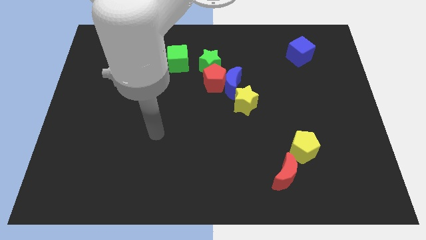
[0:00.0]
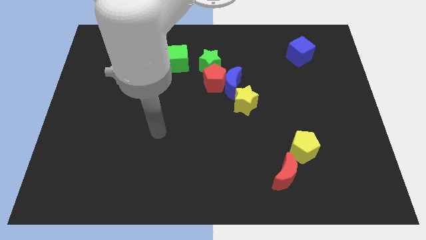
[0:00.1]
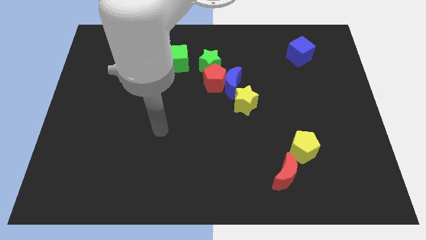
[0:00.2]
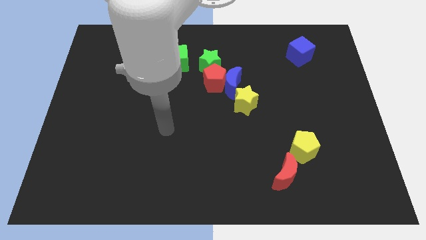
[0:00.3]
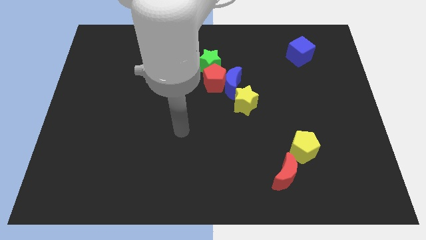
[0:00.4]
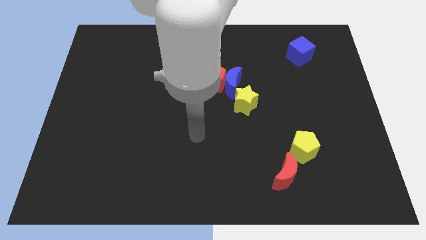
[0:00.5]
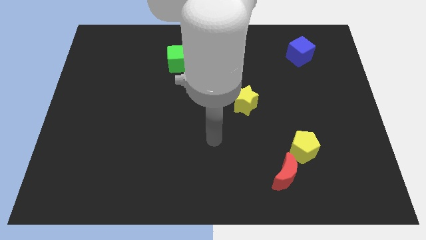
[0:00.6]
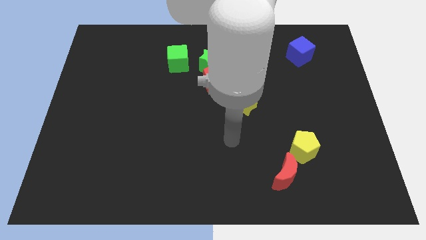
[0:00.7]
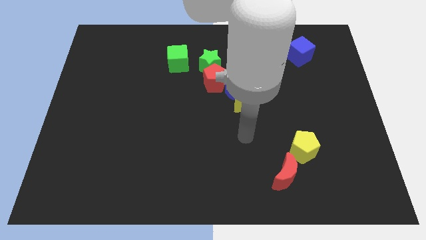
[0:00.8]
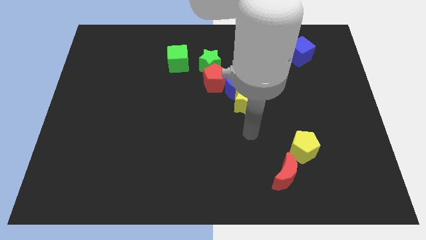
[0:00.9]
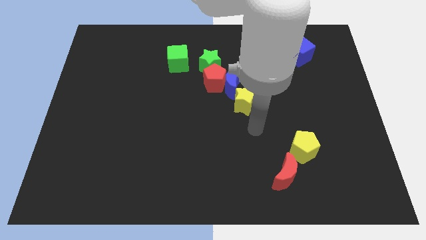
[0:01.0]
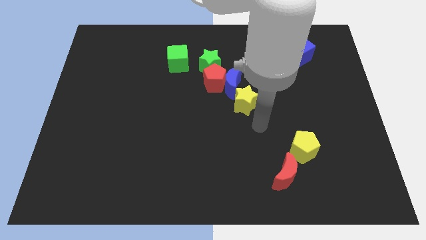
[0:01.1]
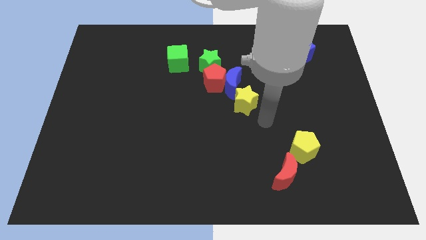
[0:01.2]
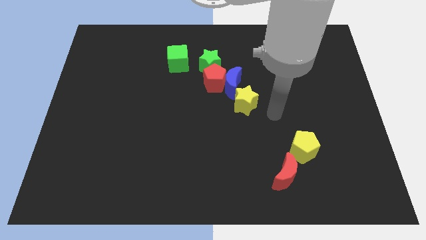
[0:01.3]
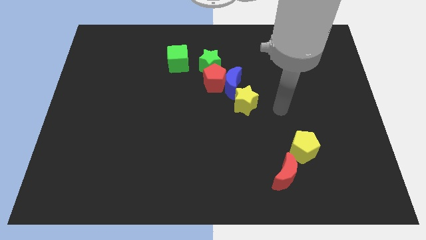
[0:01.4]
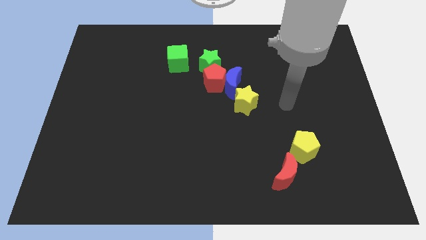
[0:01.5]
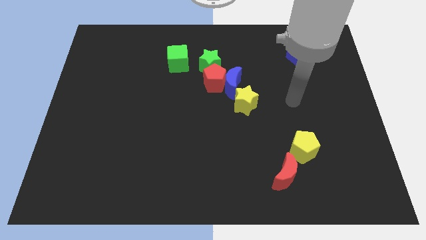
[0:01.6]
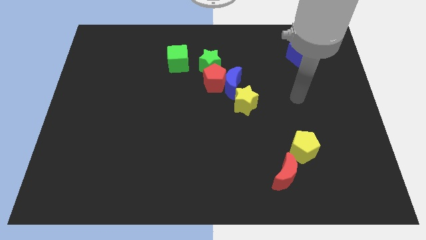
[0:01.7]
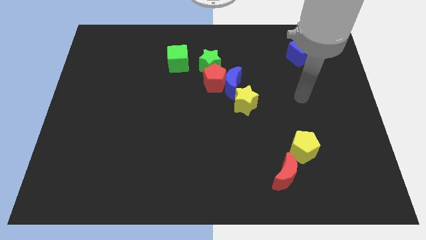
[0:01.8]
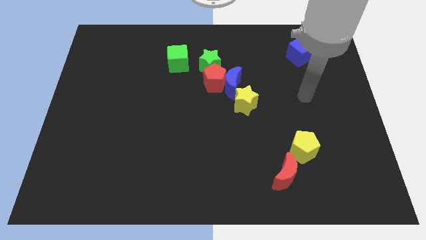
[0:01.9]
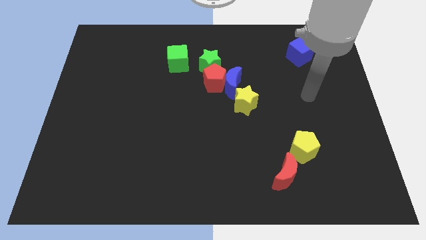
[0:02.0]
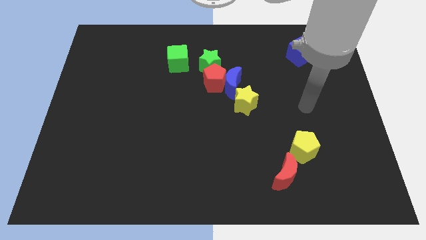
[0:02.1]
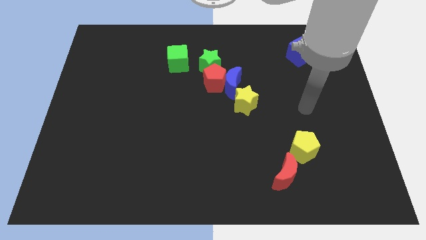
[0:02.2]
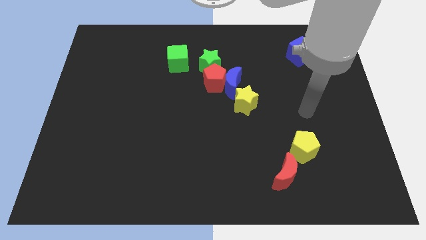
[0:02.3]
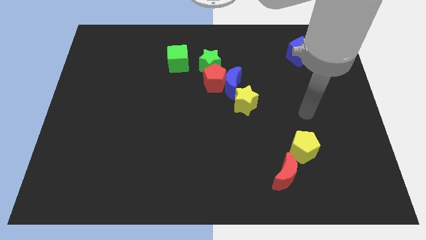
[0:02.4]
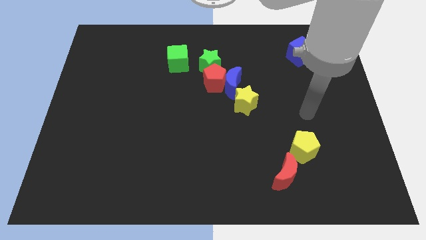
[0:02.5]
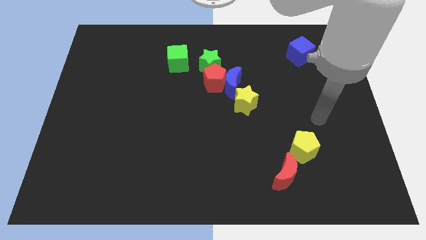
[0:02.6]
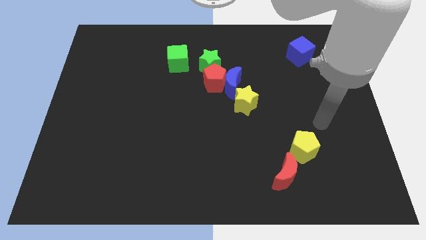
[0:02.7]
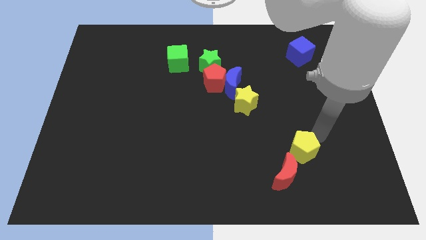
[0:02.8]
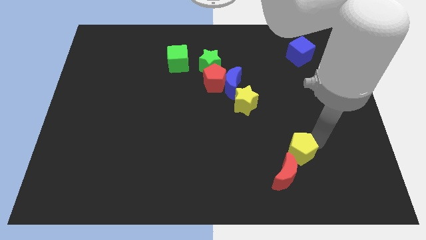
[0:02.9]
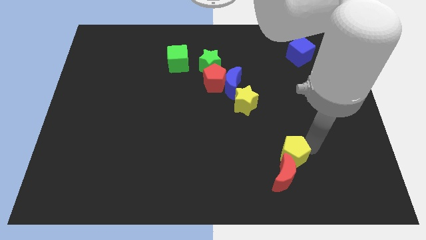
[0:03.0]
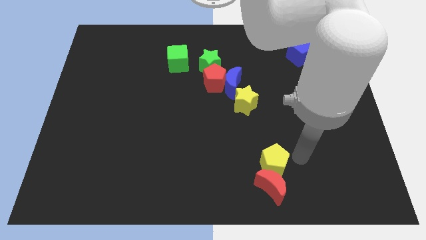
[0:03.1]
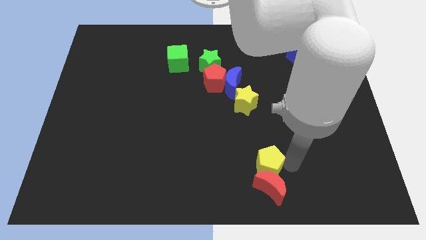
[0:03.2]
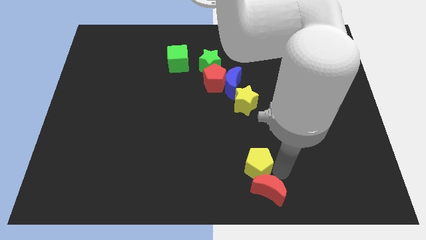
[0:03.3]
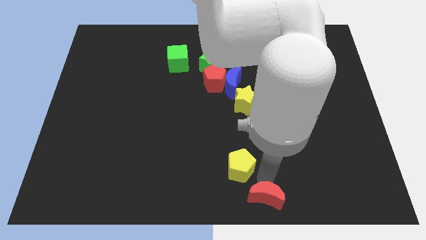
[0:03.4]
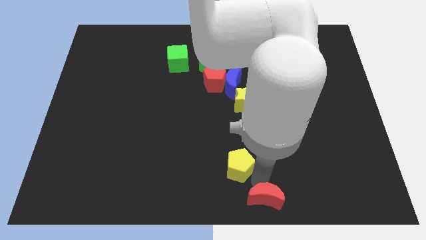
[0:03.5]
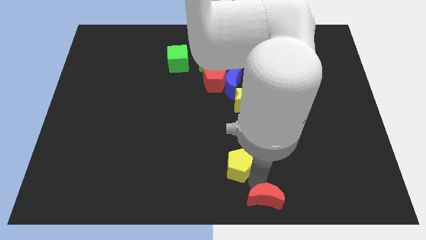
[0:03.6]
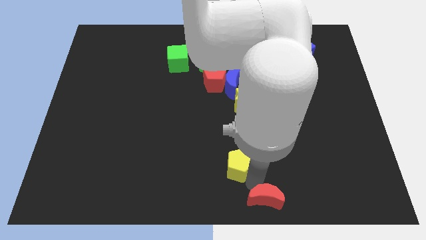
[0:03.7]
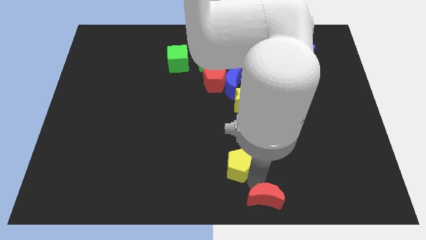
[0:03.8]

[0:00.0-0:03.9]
separate the yellow pentagon from the red crescent

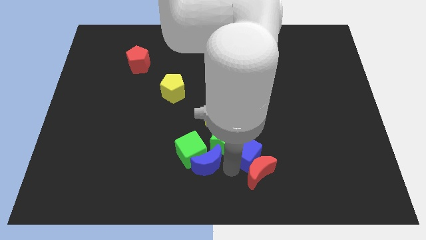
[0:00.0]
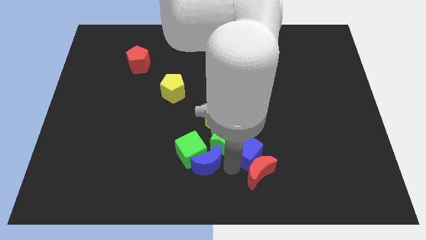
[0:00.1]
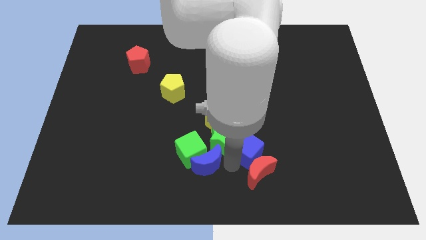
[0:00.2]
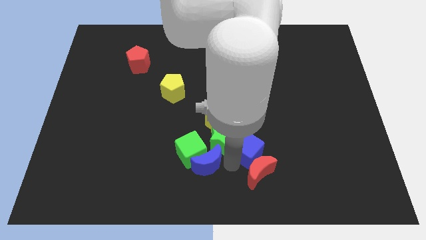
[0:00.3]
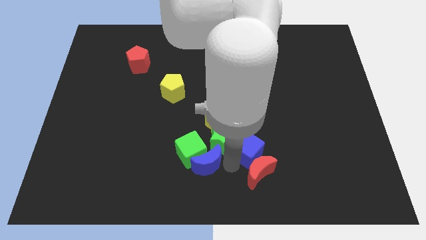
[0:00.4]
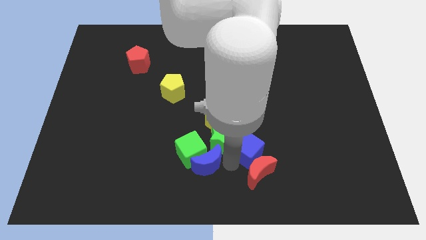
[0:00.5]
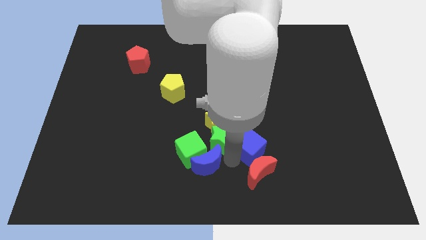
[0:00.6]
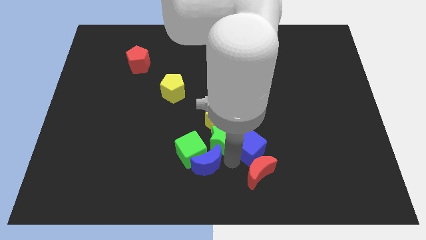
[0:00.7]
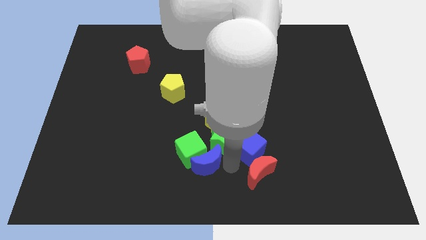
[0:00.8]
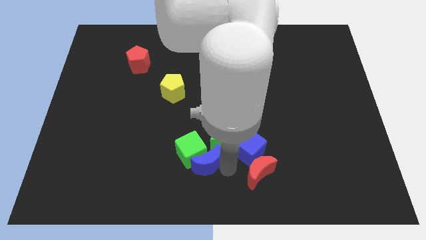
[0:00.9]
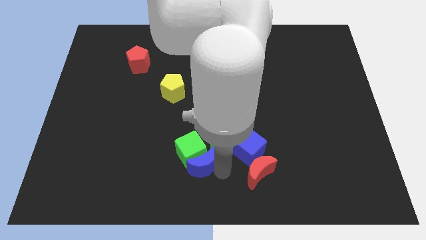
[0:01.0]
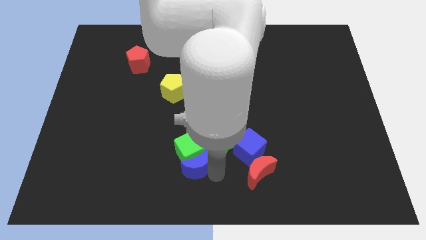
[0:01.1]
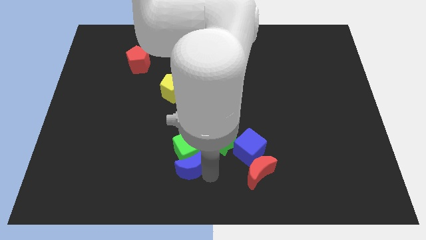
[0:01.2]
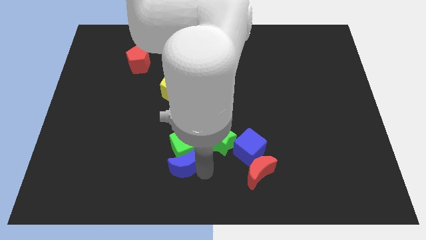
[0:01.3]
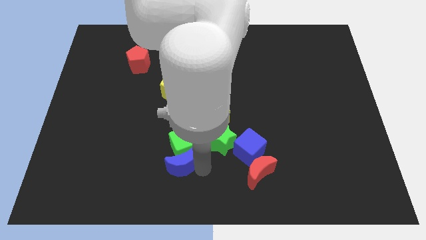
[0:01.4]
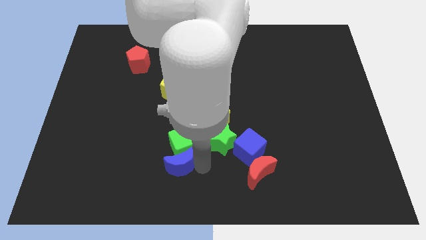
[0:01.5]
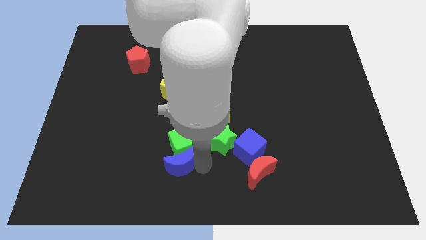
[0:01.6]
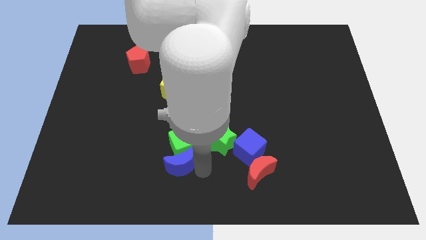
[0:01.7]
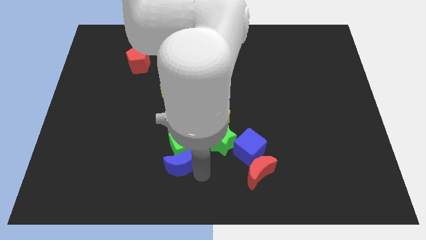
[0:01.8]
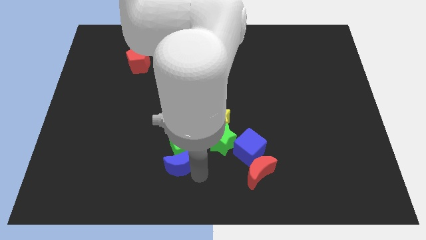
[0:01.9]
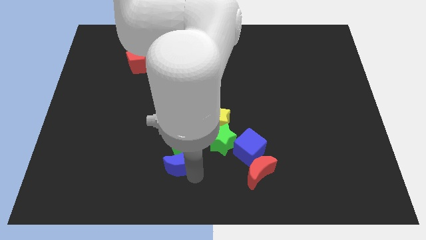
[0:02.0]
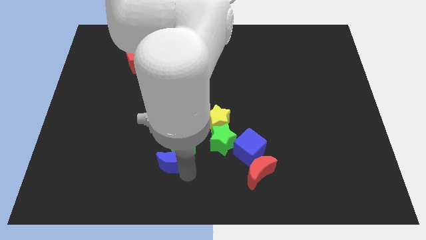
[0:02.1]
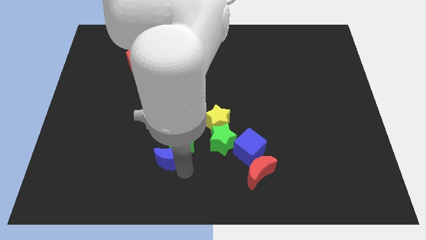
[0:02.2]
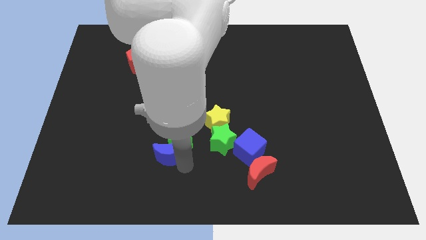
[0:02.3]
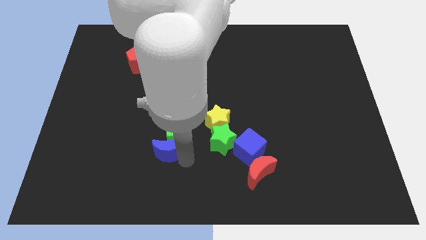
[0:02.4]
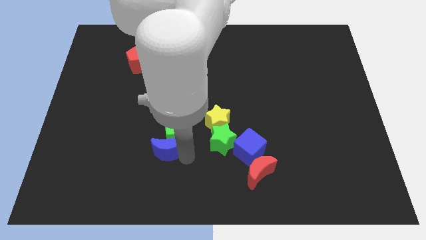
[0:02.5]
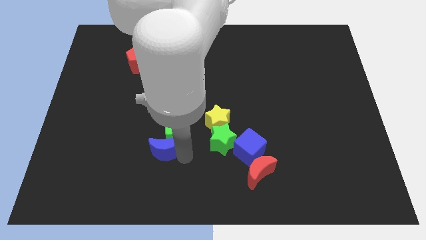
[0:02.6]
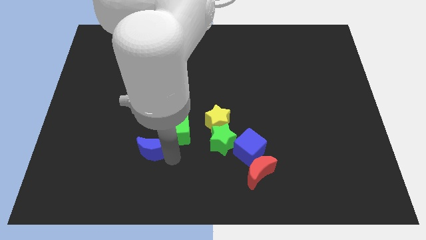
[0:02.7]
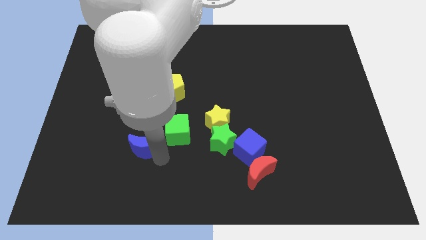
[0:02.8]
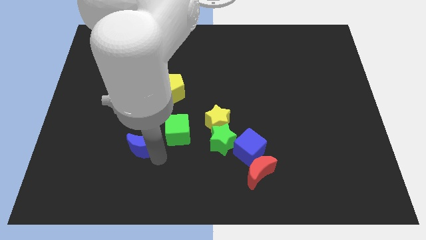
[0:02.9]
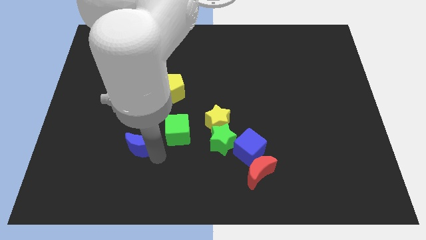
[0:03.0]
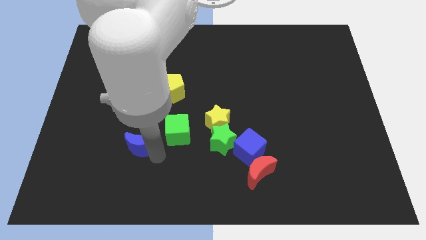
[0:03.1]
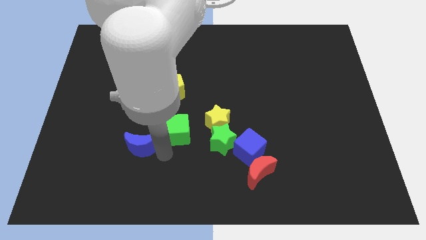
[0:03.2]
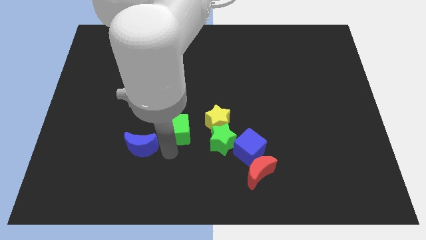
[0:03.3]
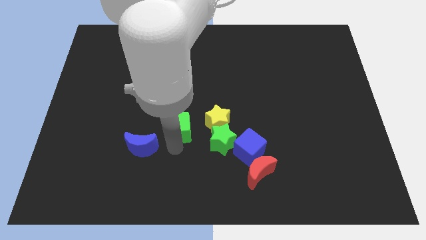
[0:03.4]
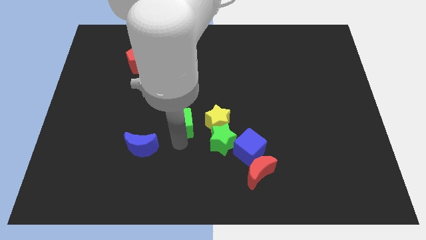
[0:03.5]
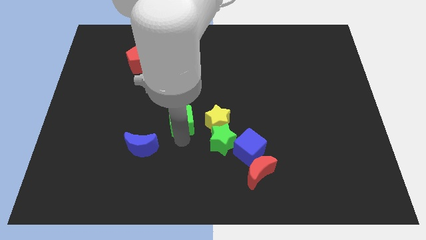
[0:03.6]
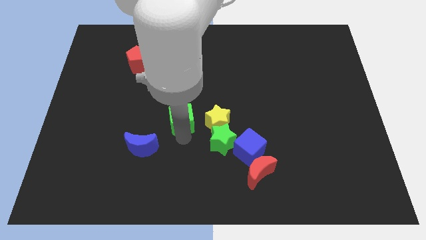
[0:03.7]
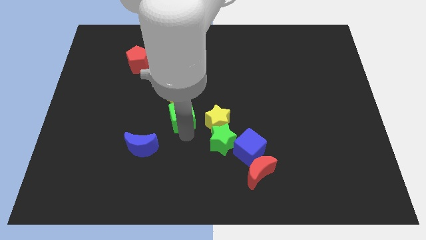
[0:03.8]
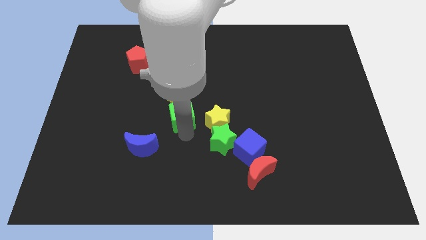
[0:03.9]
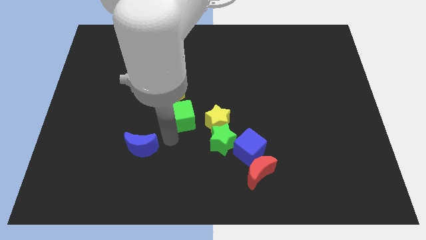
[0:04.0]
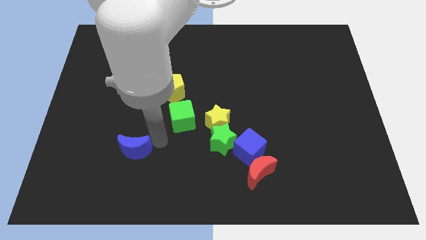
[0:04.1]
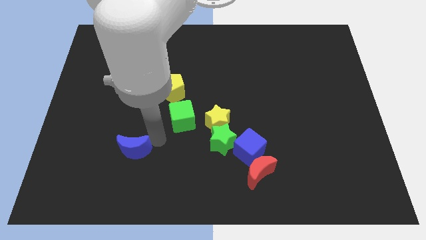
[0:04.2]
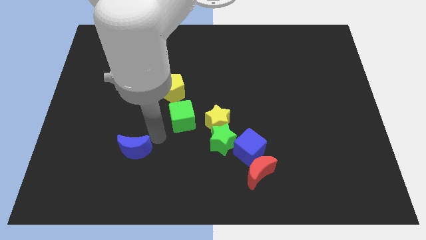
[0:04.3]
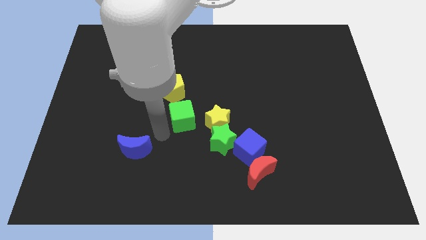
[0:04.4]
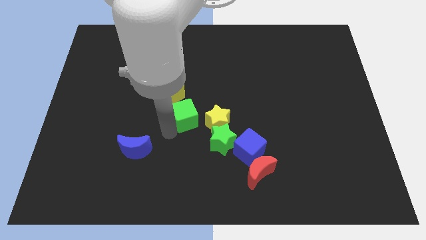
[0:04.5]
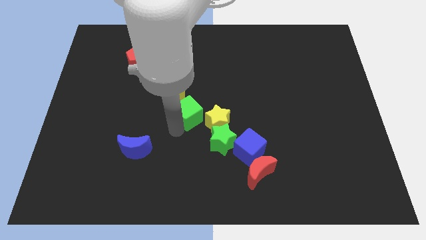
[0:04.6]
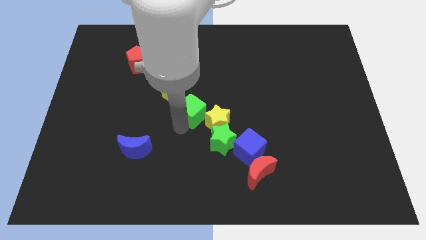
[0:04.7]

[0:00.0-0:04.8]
move the blue crescent away from the green cube

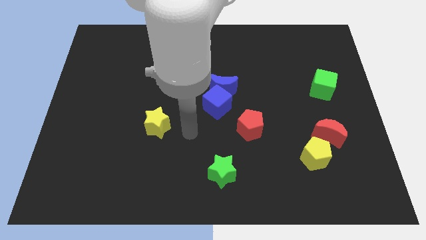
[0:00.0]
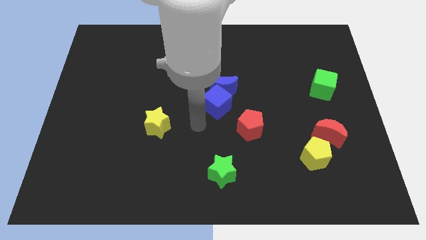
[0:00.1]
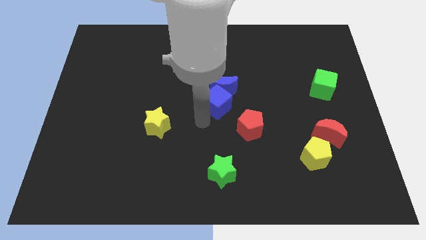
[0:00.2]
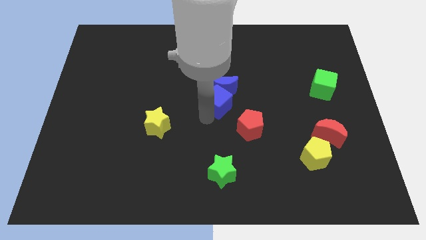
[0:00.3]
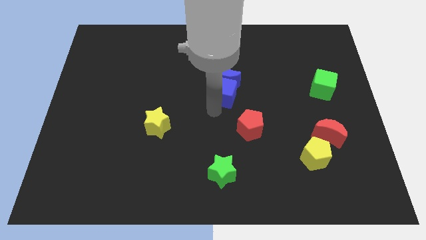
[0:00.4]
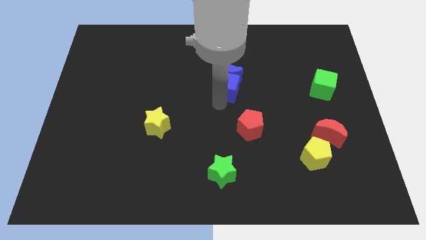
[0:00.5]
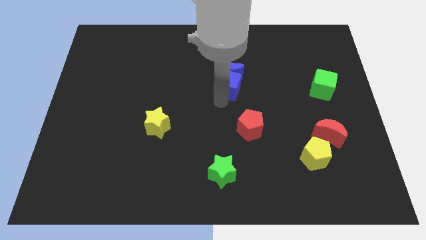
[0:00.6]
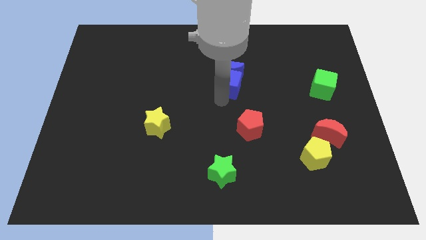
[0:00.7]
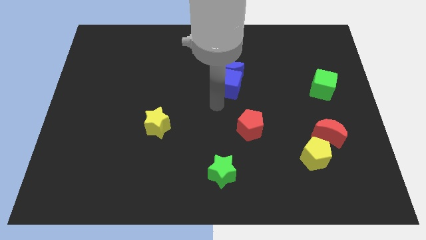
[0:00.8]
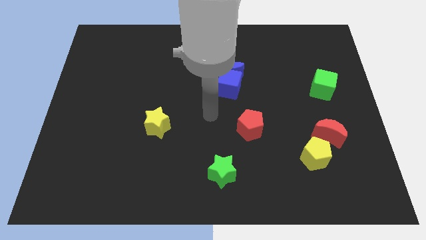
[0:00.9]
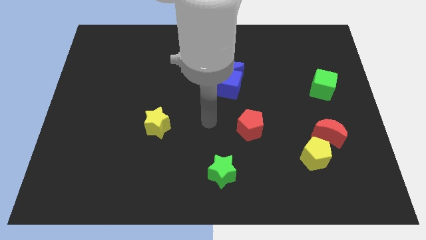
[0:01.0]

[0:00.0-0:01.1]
slightly push the two blue blocks to up side
